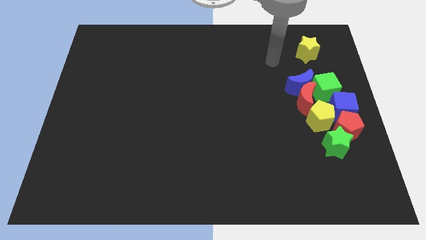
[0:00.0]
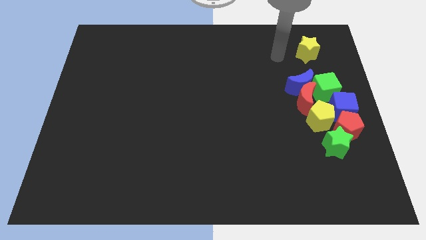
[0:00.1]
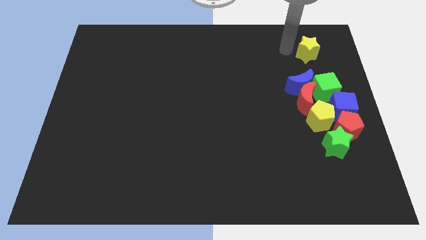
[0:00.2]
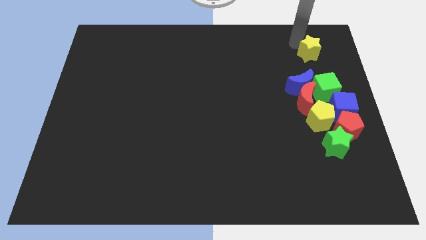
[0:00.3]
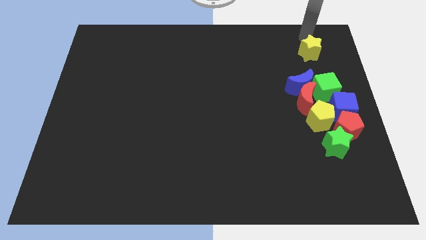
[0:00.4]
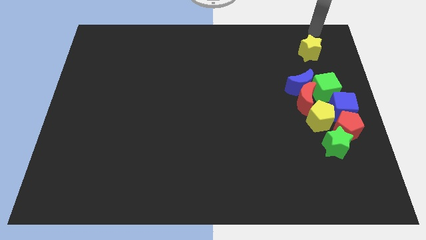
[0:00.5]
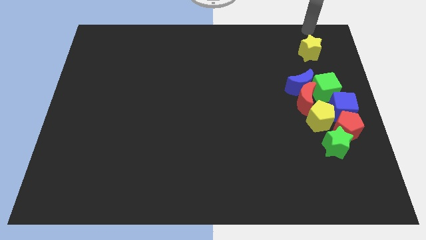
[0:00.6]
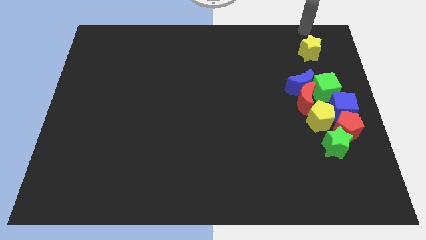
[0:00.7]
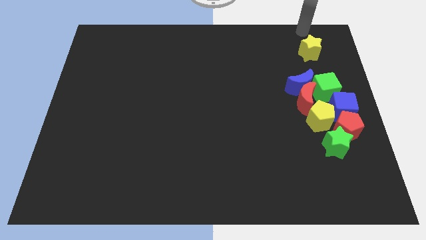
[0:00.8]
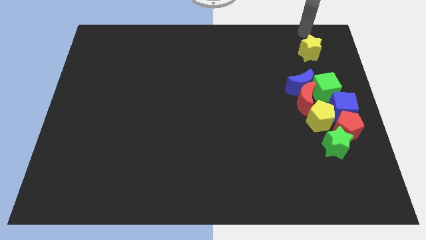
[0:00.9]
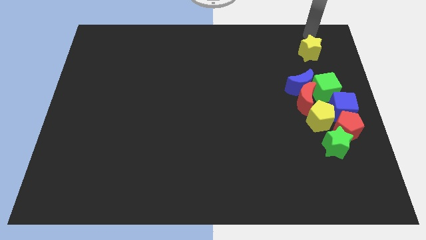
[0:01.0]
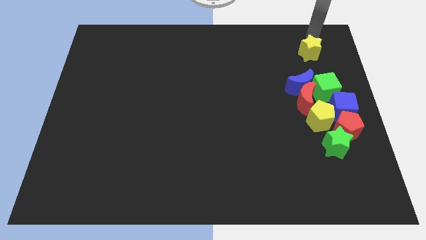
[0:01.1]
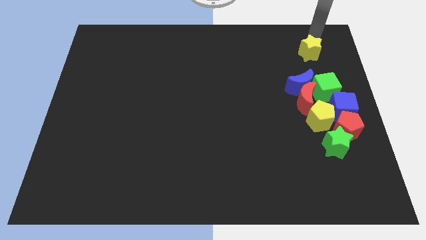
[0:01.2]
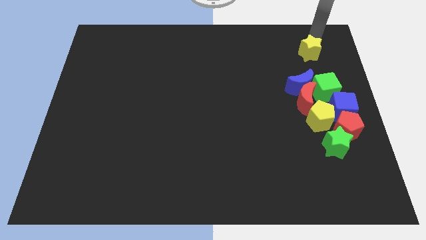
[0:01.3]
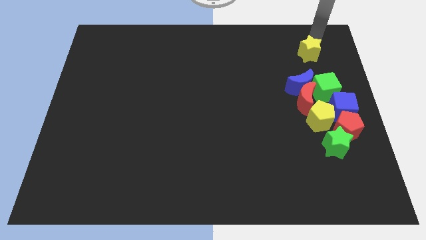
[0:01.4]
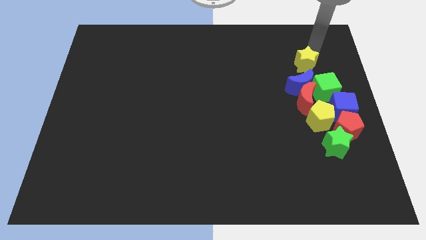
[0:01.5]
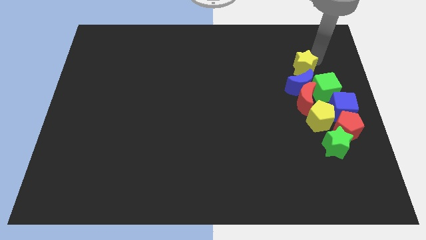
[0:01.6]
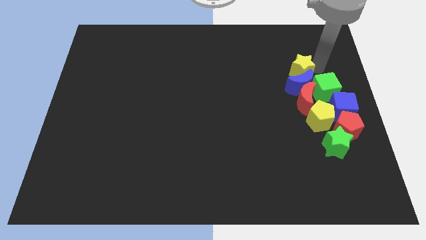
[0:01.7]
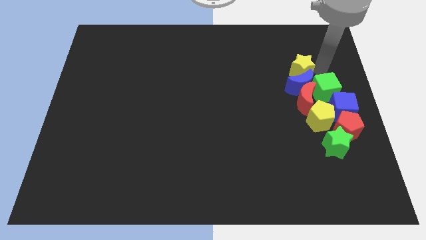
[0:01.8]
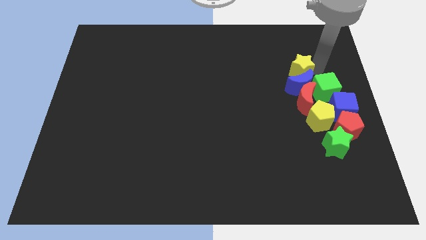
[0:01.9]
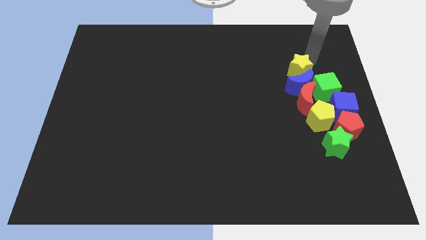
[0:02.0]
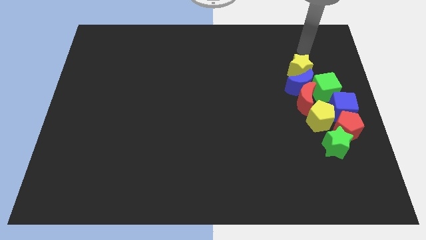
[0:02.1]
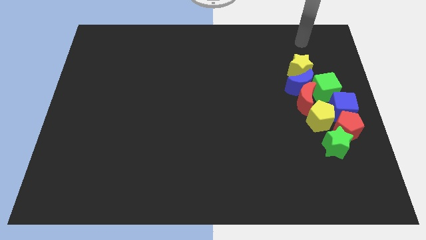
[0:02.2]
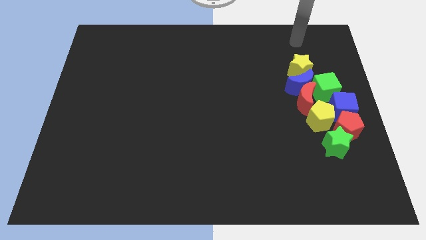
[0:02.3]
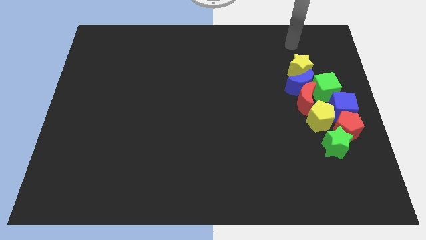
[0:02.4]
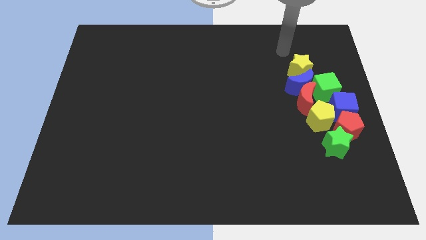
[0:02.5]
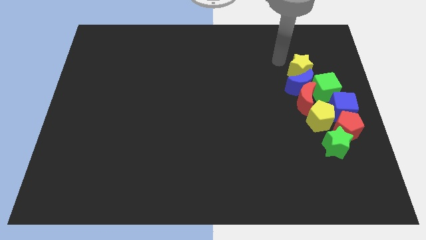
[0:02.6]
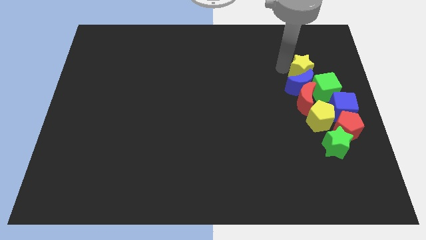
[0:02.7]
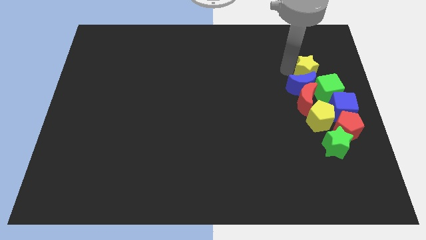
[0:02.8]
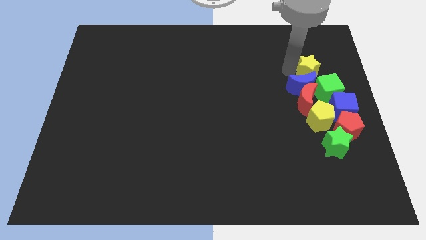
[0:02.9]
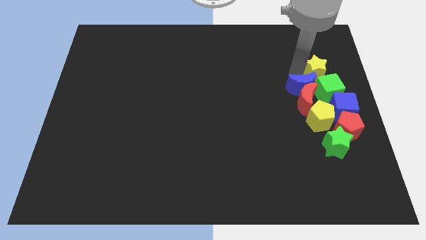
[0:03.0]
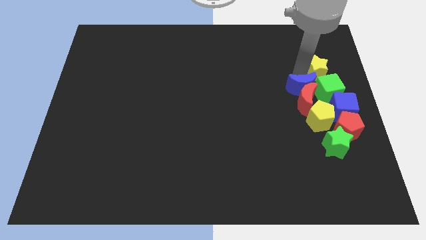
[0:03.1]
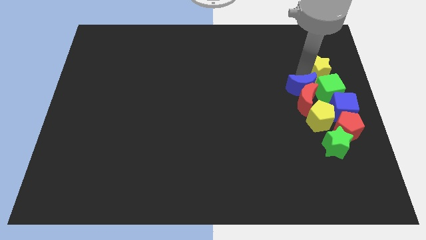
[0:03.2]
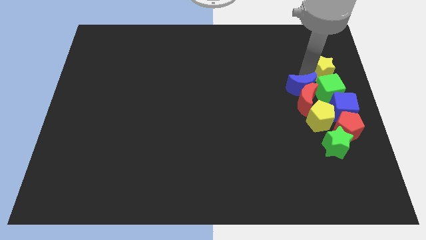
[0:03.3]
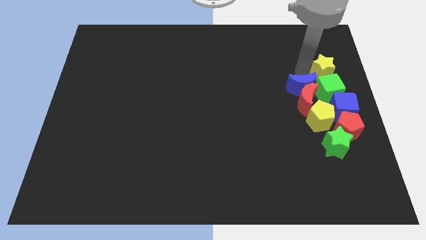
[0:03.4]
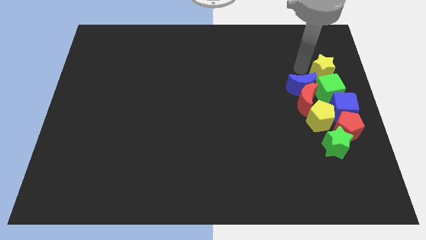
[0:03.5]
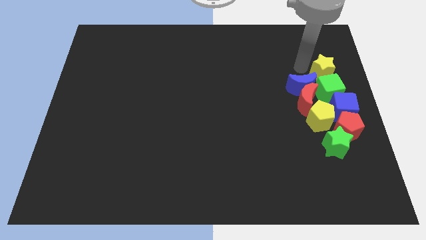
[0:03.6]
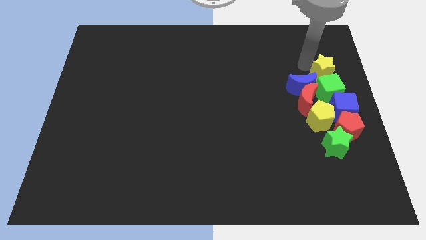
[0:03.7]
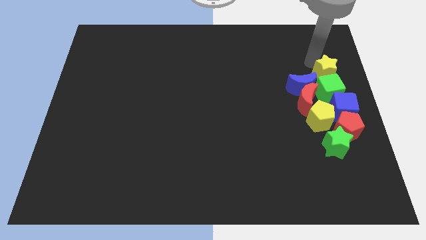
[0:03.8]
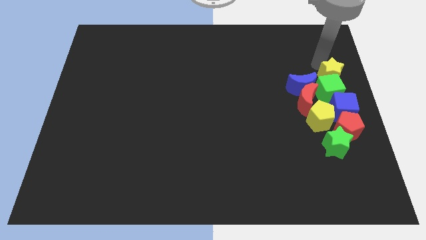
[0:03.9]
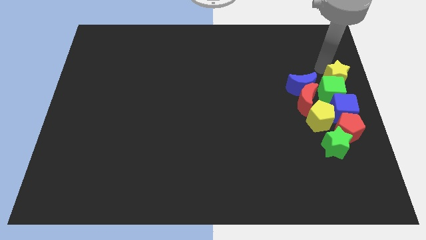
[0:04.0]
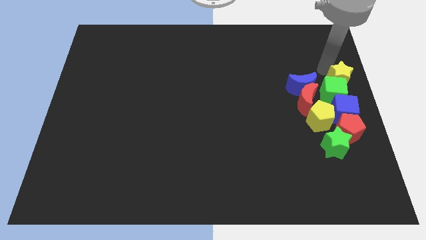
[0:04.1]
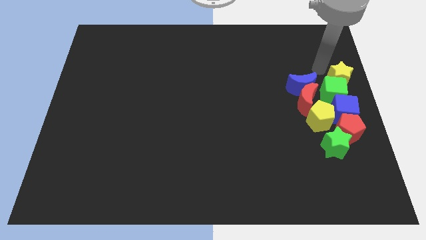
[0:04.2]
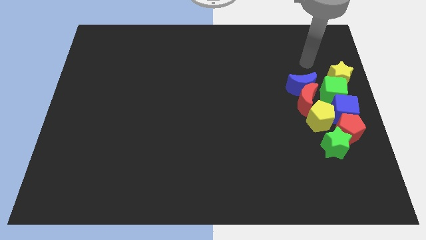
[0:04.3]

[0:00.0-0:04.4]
move the yellow star to the top of the green cube

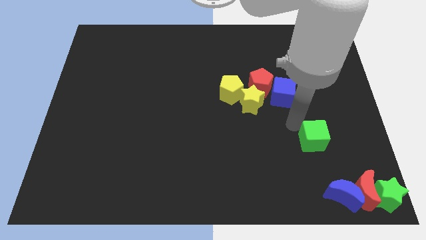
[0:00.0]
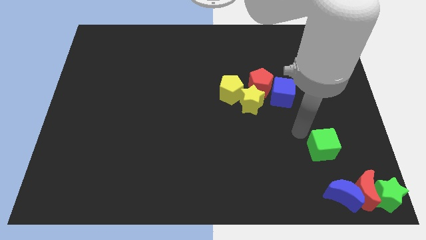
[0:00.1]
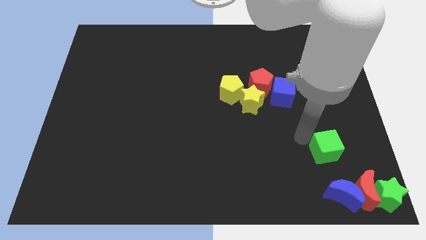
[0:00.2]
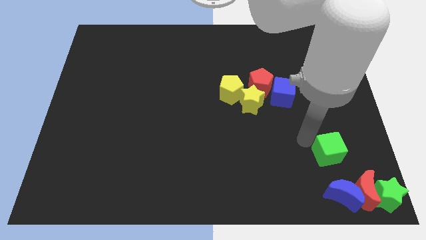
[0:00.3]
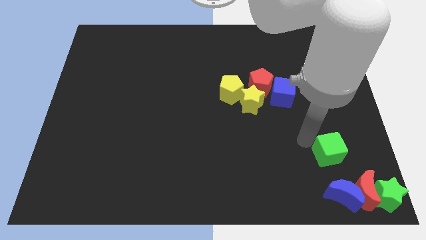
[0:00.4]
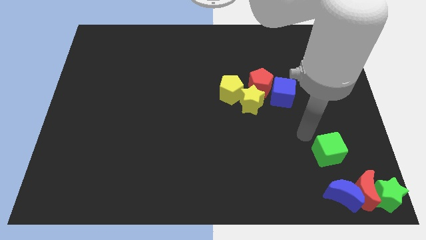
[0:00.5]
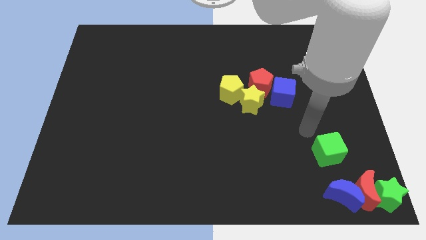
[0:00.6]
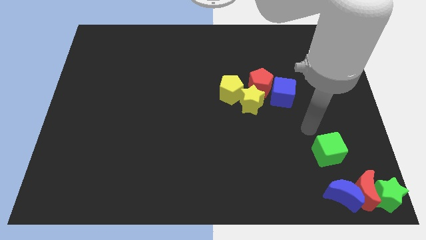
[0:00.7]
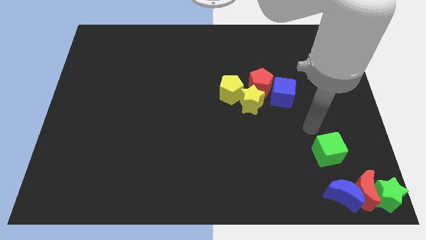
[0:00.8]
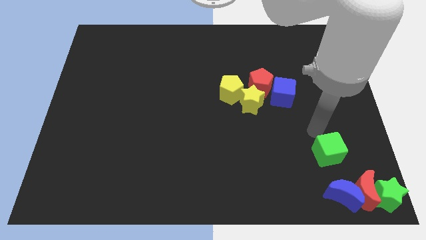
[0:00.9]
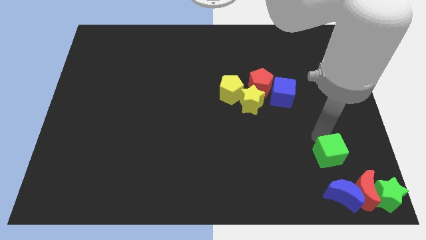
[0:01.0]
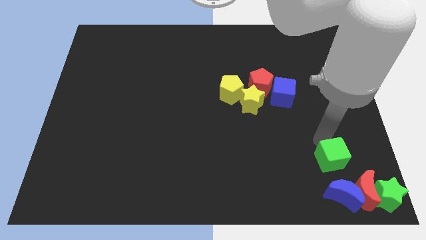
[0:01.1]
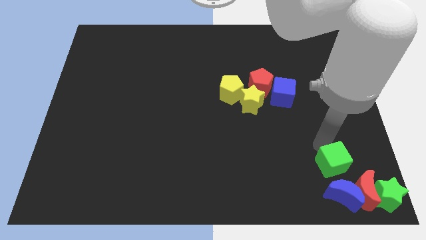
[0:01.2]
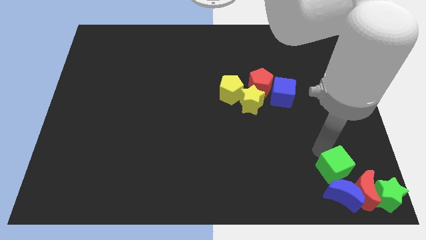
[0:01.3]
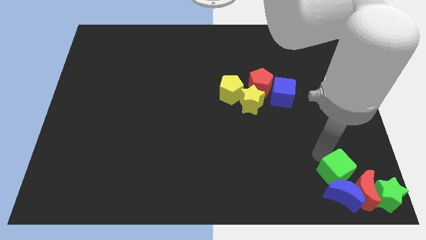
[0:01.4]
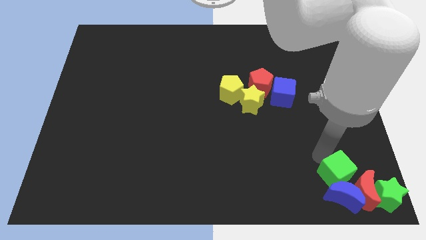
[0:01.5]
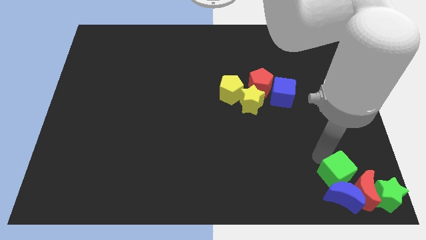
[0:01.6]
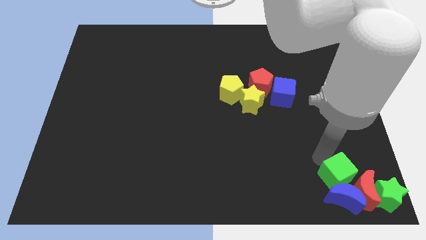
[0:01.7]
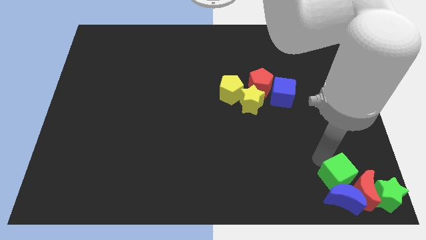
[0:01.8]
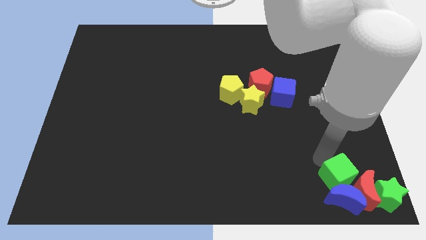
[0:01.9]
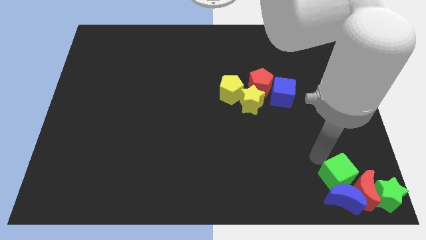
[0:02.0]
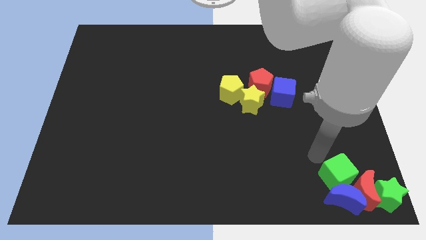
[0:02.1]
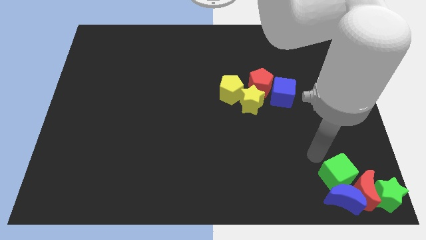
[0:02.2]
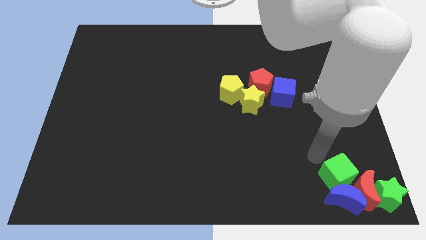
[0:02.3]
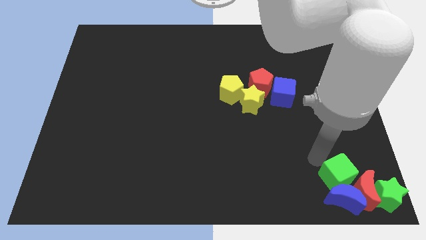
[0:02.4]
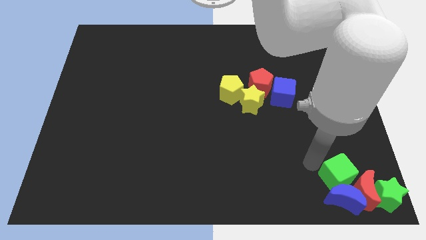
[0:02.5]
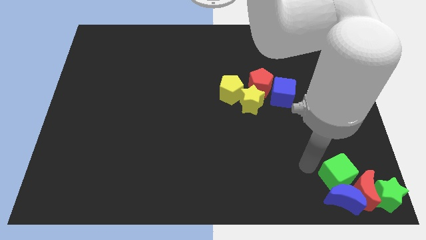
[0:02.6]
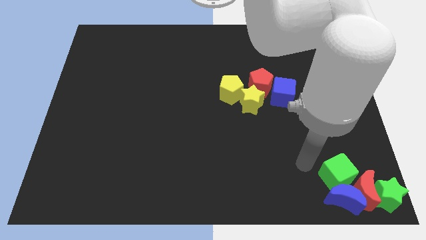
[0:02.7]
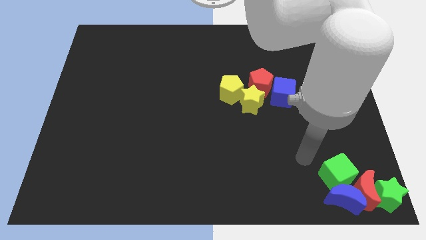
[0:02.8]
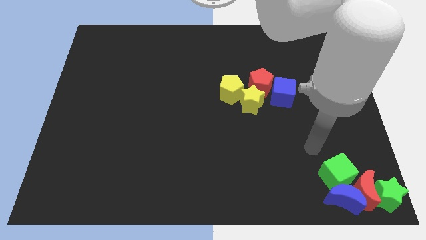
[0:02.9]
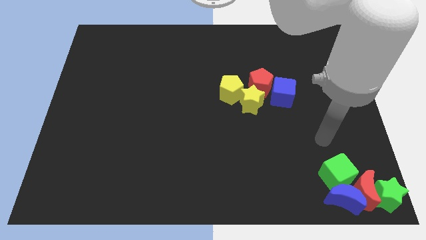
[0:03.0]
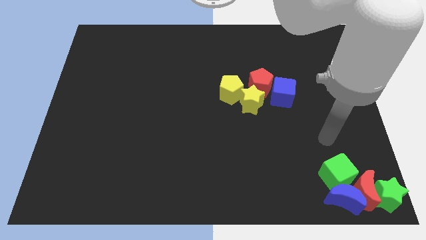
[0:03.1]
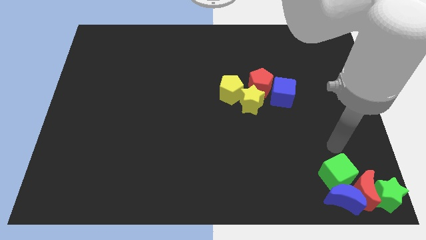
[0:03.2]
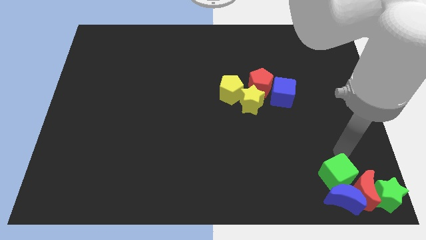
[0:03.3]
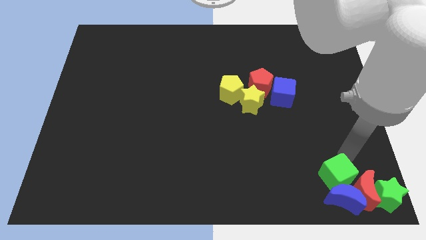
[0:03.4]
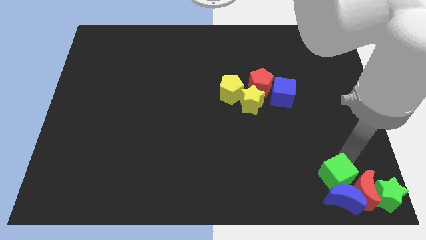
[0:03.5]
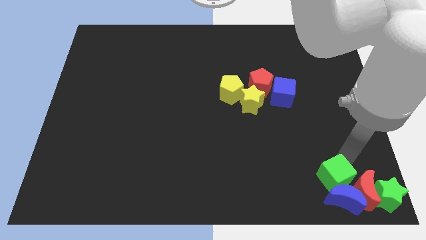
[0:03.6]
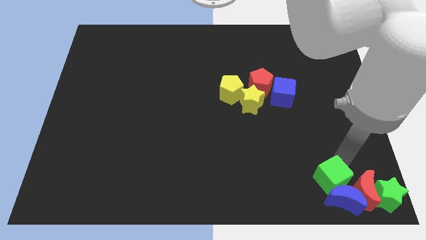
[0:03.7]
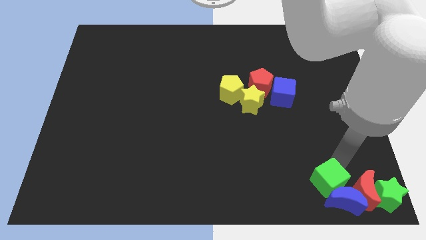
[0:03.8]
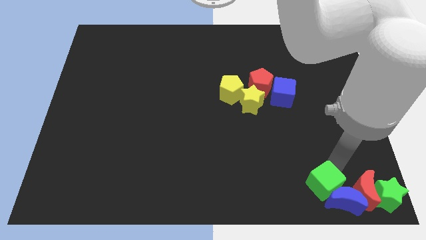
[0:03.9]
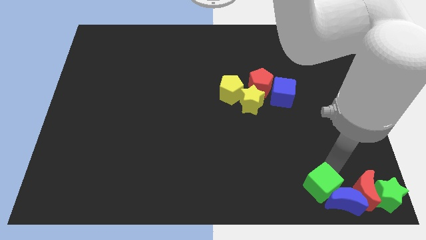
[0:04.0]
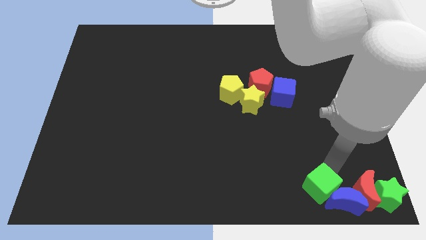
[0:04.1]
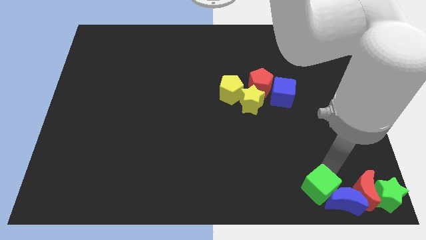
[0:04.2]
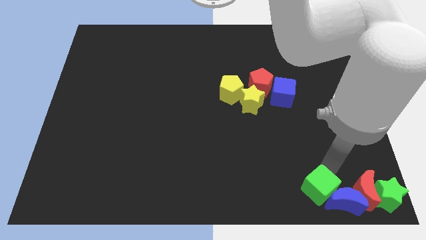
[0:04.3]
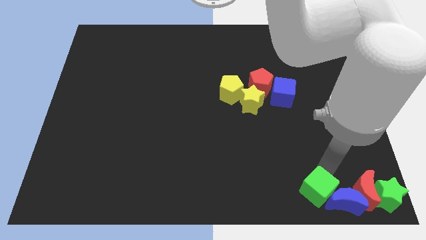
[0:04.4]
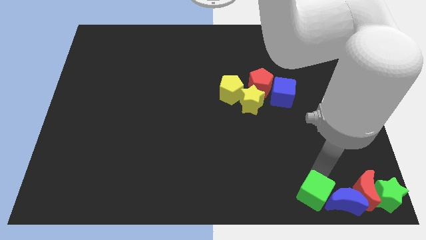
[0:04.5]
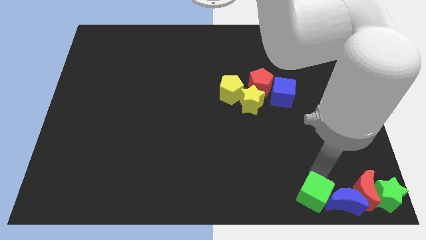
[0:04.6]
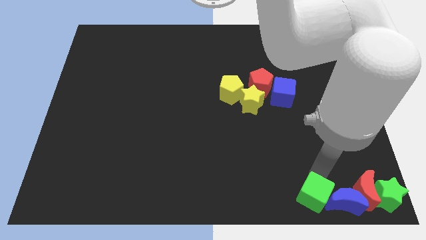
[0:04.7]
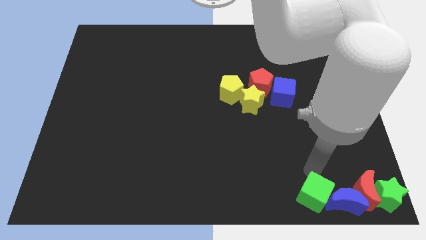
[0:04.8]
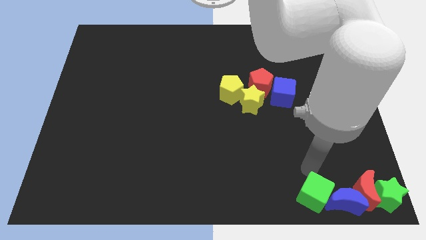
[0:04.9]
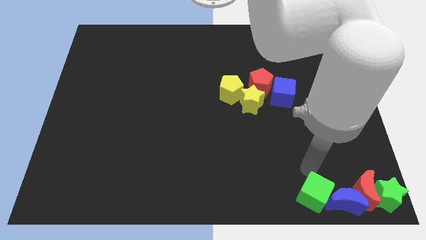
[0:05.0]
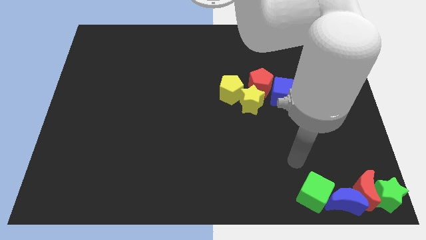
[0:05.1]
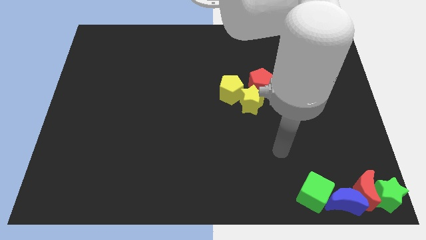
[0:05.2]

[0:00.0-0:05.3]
put the green cube on the left side of the blue crescent
